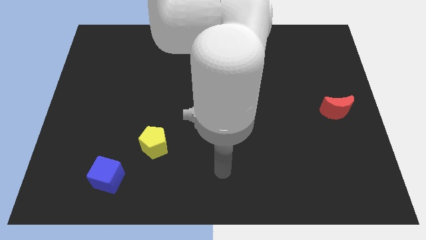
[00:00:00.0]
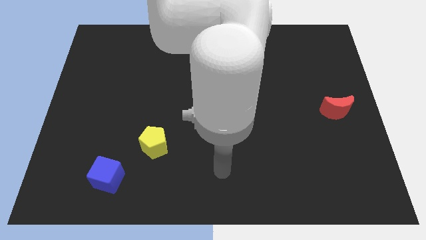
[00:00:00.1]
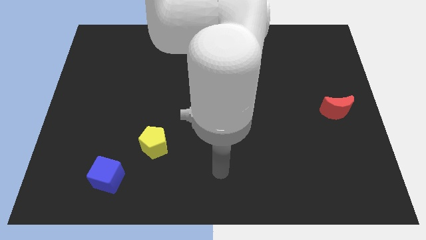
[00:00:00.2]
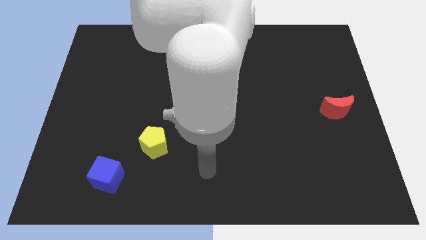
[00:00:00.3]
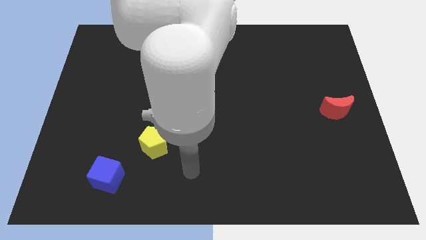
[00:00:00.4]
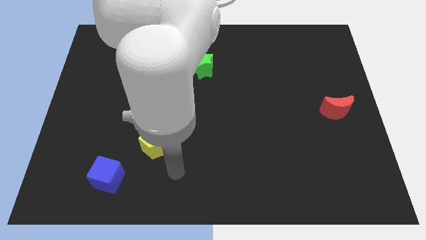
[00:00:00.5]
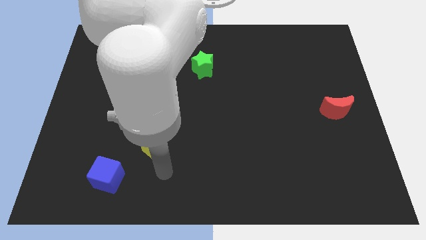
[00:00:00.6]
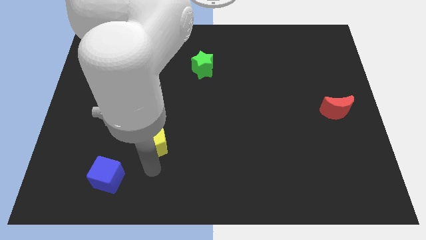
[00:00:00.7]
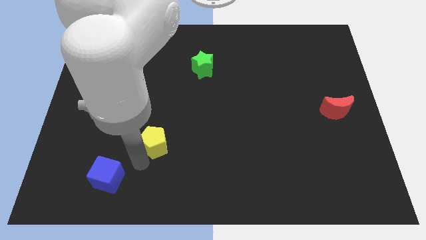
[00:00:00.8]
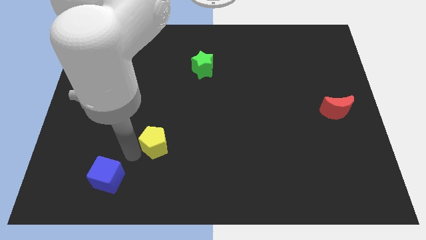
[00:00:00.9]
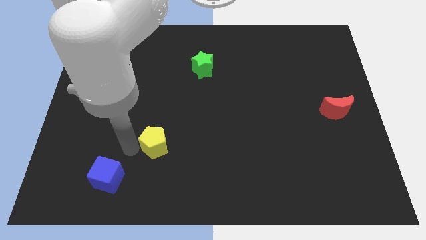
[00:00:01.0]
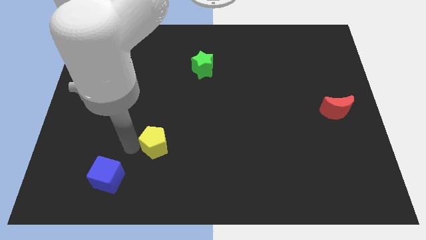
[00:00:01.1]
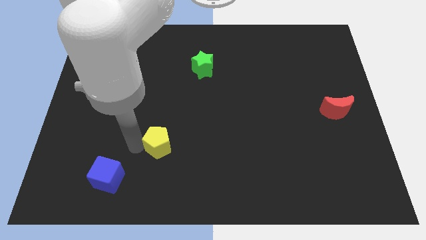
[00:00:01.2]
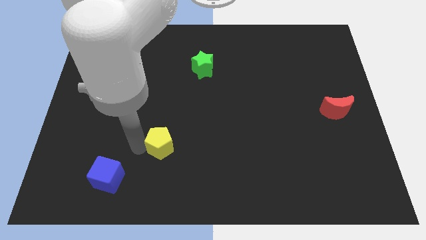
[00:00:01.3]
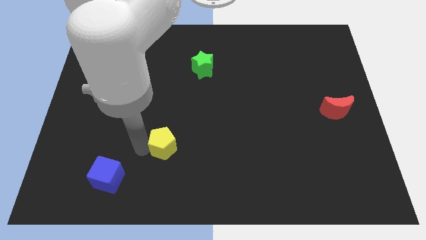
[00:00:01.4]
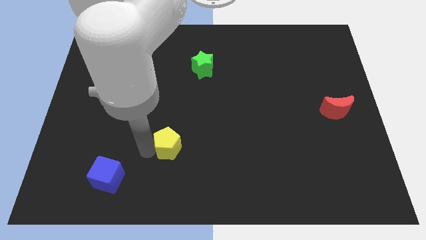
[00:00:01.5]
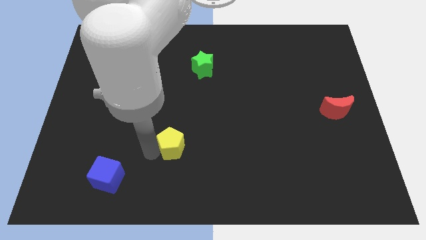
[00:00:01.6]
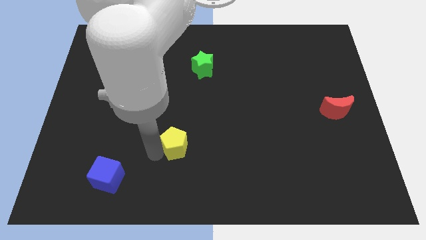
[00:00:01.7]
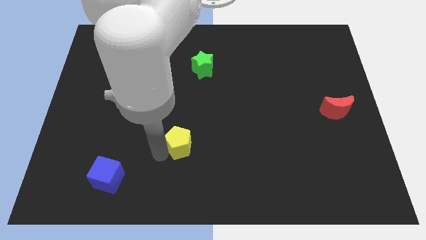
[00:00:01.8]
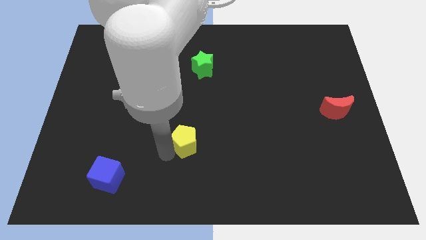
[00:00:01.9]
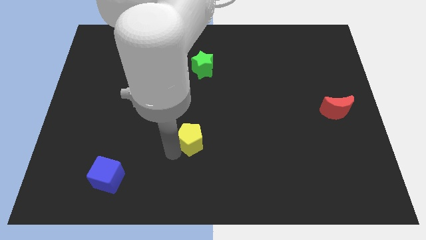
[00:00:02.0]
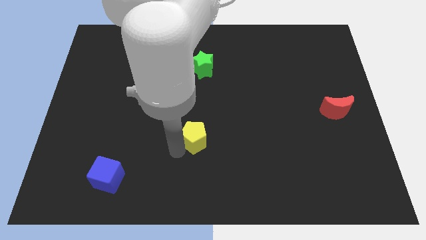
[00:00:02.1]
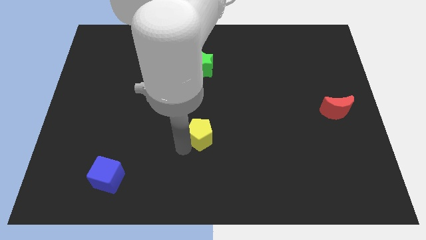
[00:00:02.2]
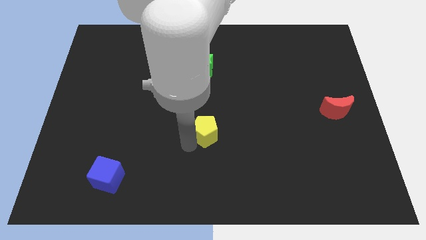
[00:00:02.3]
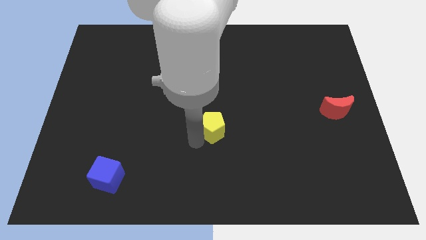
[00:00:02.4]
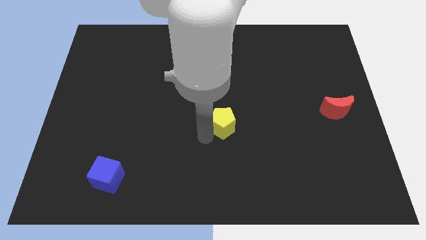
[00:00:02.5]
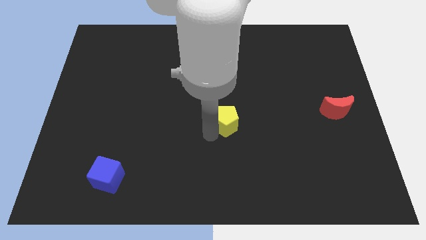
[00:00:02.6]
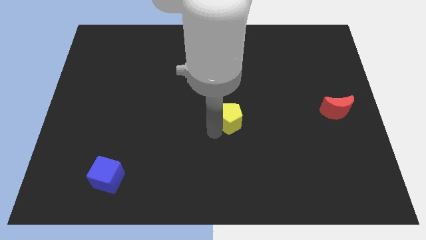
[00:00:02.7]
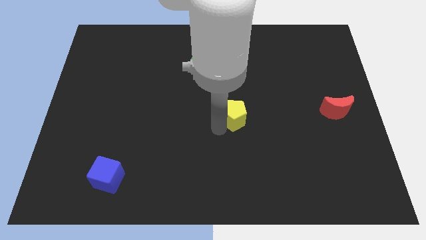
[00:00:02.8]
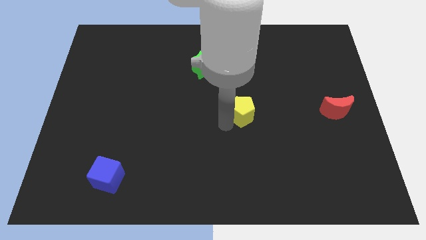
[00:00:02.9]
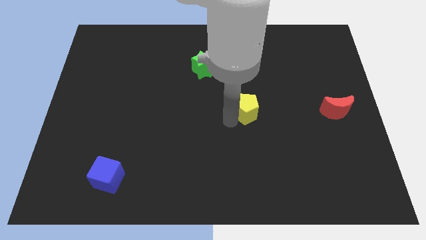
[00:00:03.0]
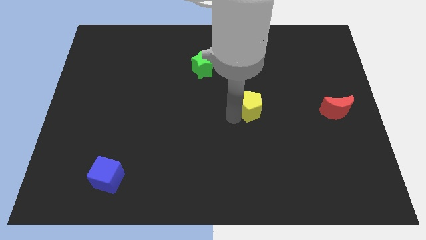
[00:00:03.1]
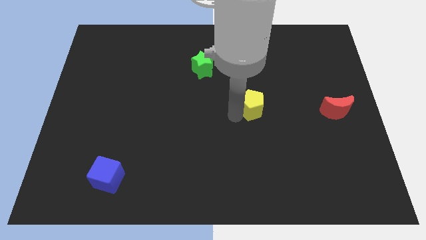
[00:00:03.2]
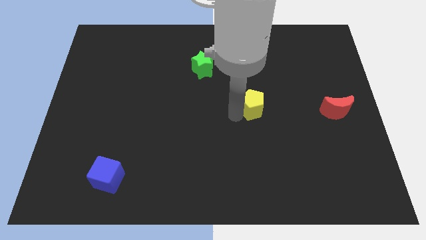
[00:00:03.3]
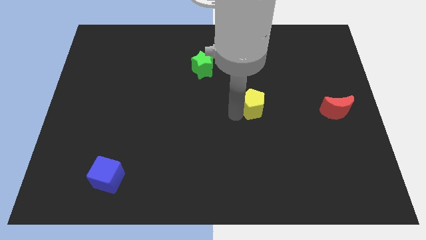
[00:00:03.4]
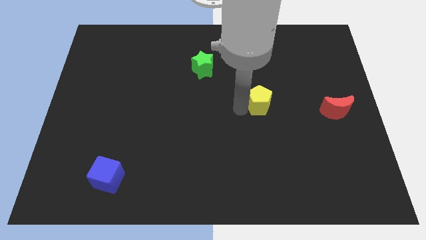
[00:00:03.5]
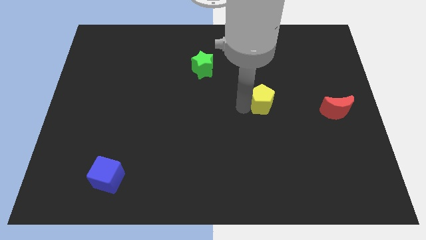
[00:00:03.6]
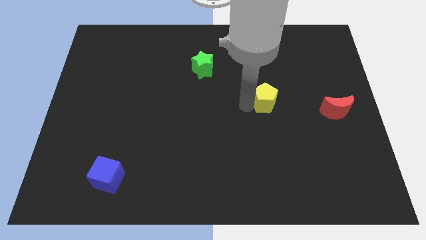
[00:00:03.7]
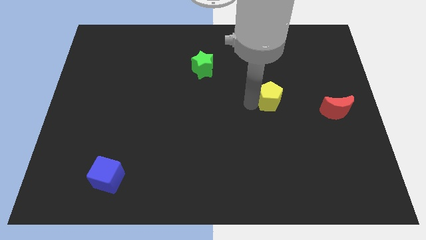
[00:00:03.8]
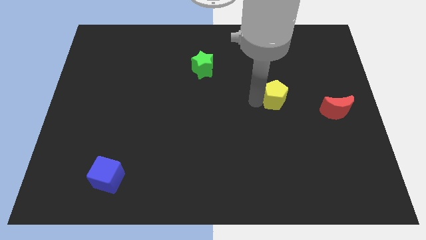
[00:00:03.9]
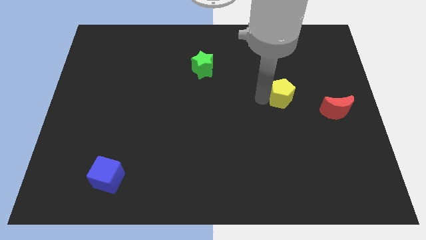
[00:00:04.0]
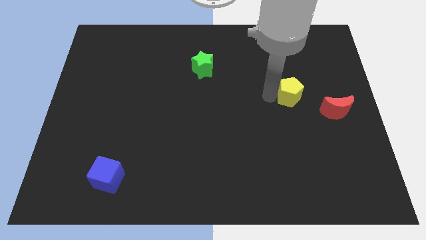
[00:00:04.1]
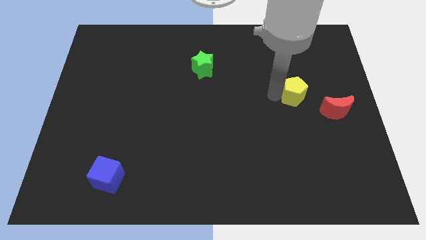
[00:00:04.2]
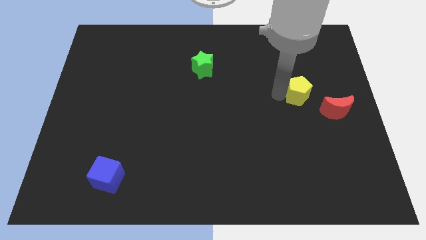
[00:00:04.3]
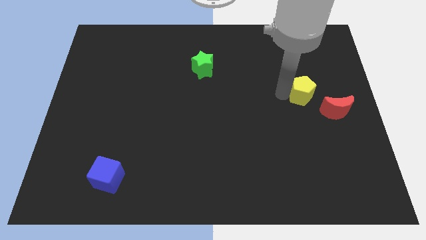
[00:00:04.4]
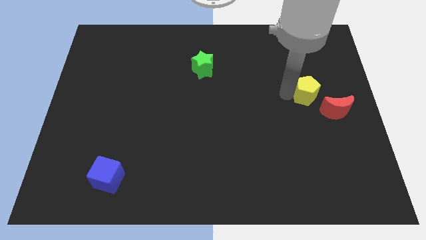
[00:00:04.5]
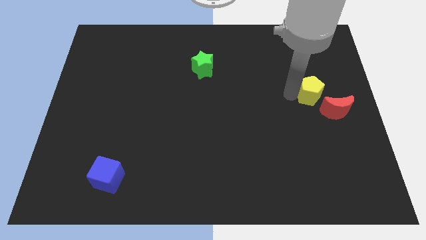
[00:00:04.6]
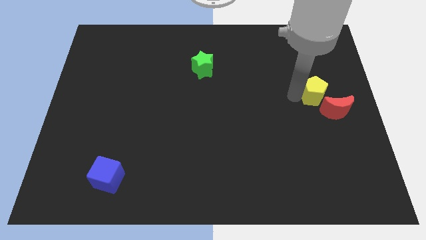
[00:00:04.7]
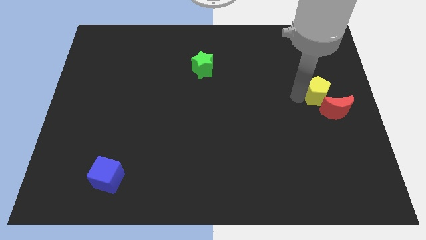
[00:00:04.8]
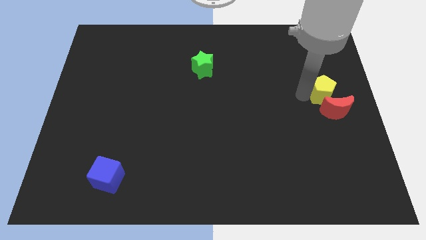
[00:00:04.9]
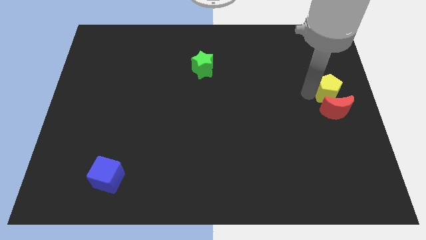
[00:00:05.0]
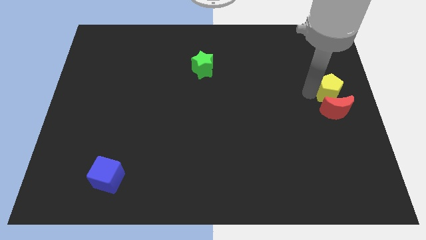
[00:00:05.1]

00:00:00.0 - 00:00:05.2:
push the yellow block towards the red moon

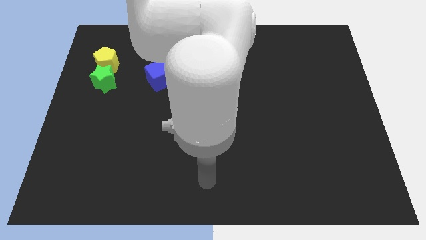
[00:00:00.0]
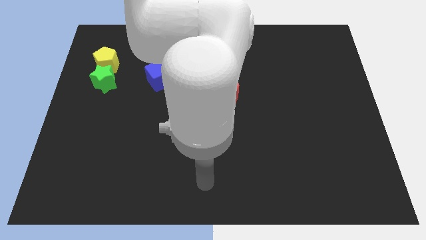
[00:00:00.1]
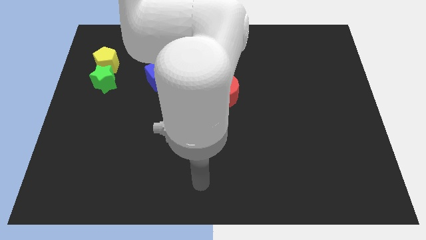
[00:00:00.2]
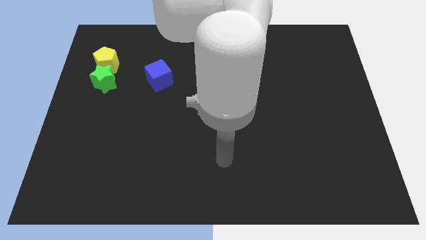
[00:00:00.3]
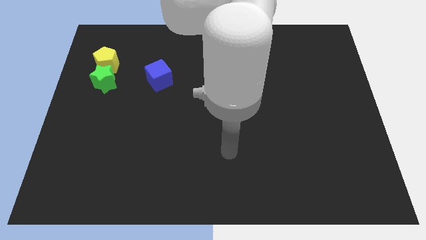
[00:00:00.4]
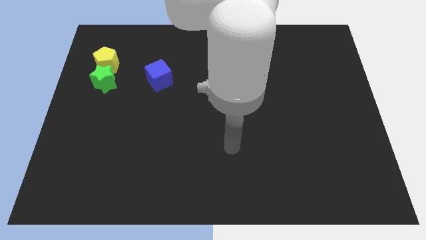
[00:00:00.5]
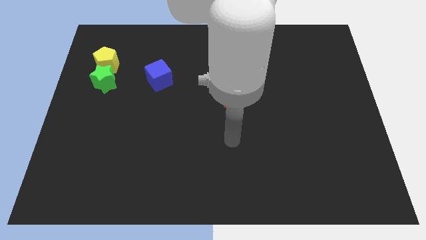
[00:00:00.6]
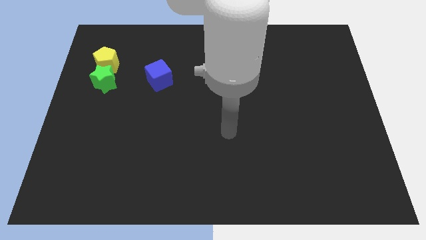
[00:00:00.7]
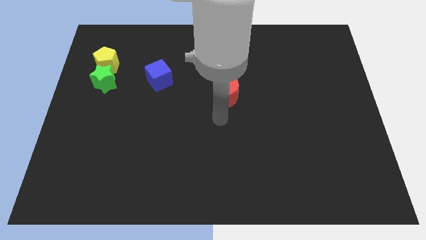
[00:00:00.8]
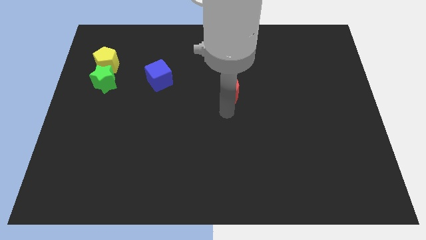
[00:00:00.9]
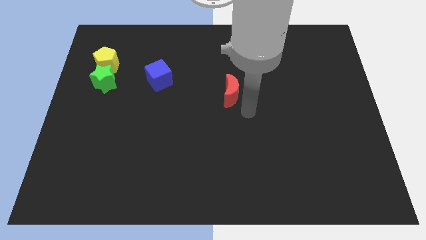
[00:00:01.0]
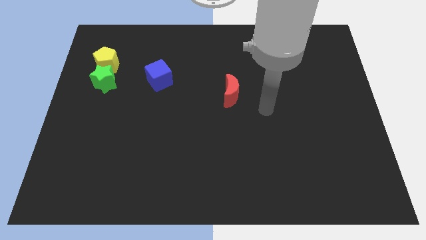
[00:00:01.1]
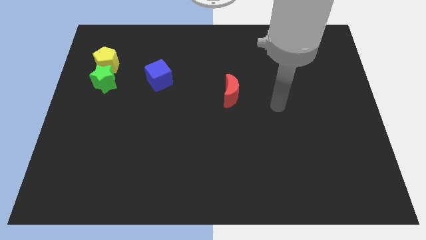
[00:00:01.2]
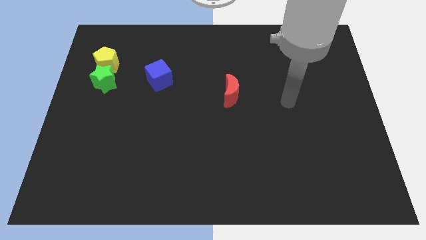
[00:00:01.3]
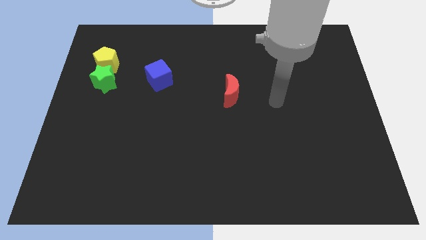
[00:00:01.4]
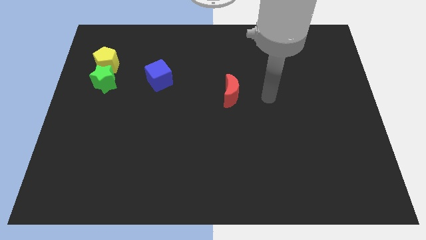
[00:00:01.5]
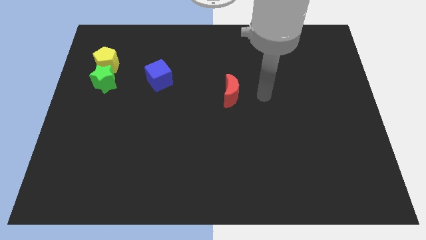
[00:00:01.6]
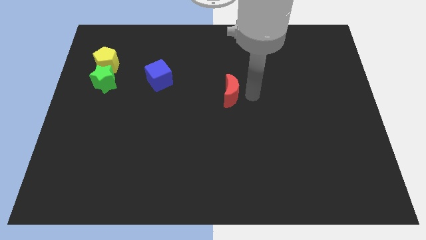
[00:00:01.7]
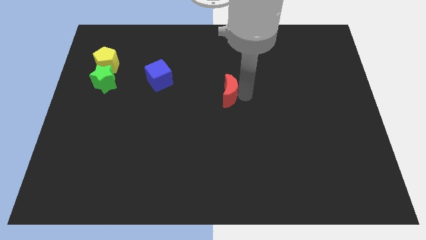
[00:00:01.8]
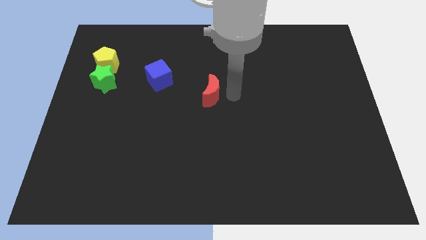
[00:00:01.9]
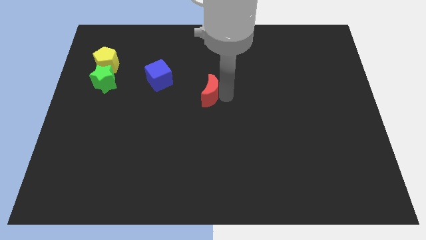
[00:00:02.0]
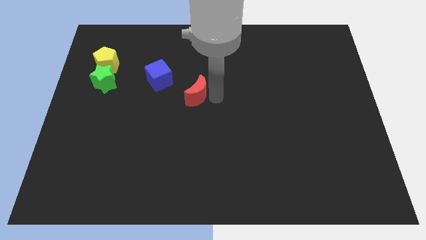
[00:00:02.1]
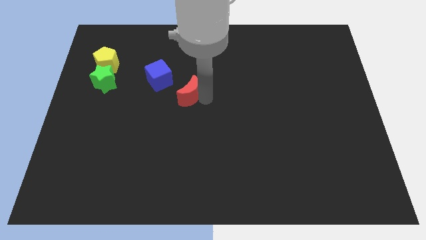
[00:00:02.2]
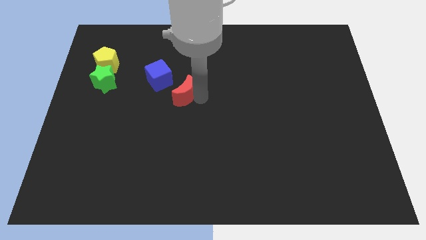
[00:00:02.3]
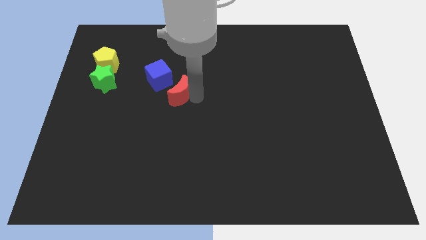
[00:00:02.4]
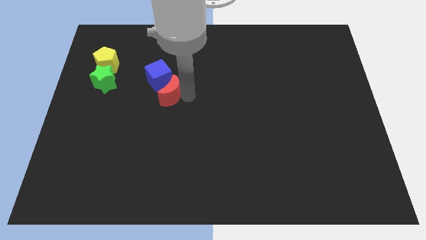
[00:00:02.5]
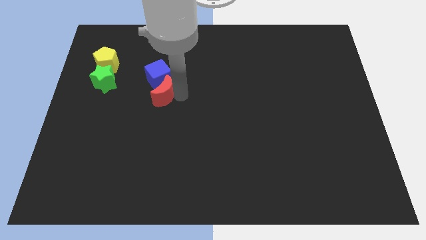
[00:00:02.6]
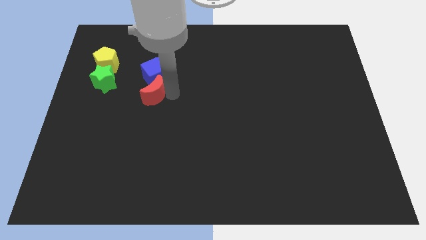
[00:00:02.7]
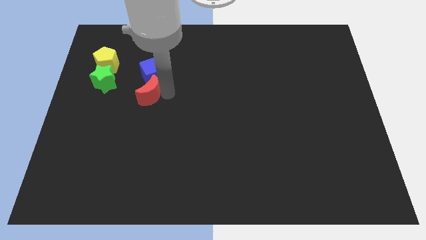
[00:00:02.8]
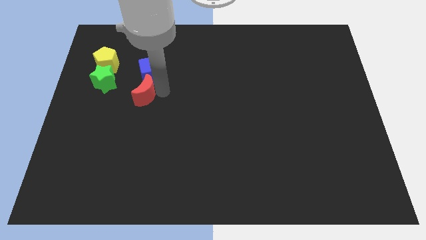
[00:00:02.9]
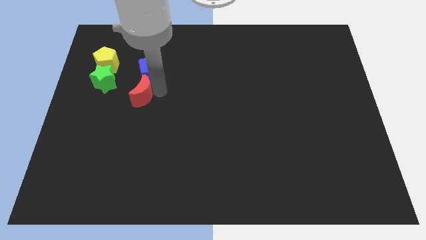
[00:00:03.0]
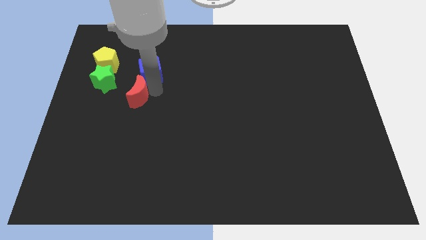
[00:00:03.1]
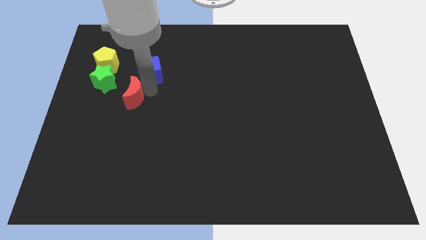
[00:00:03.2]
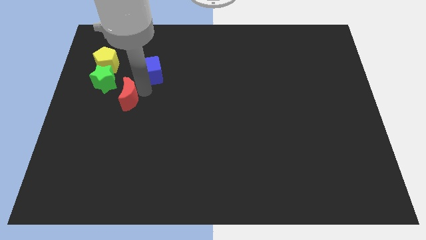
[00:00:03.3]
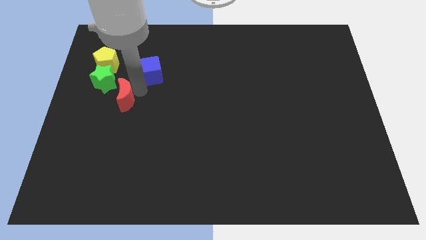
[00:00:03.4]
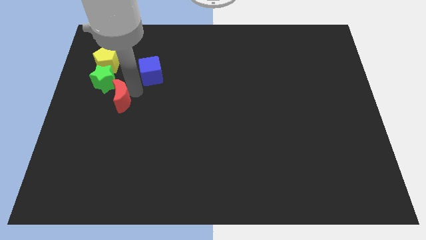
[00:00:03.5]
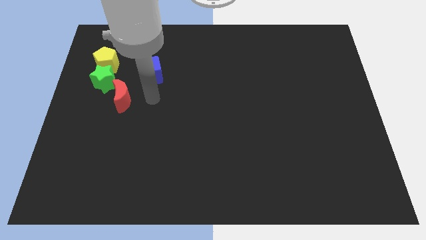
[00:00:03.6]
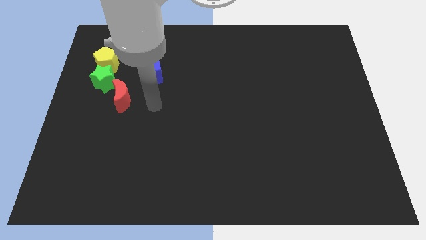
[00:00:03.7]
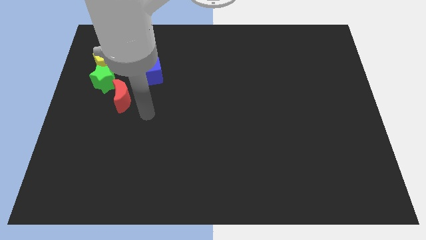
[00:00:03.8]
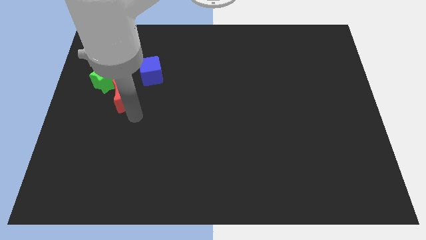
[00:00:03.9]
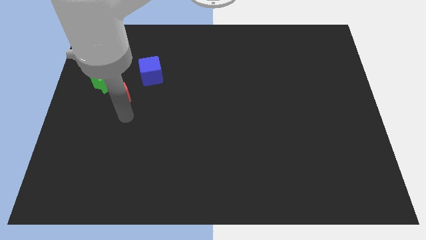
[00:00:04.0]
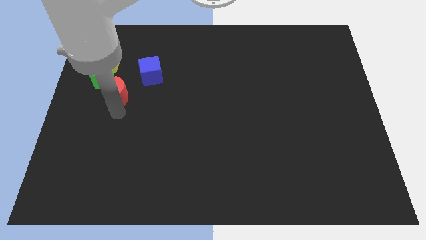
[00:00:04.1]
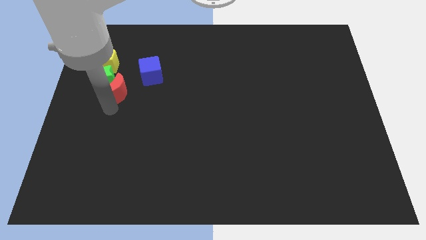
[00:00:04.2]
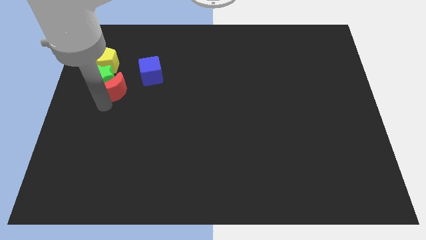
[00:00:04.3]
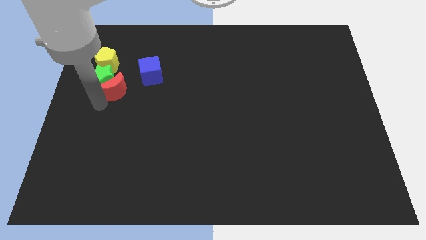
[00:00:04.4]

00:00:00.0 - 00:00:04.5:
put the moon close to the star
